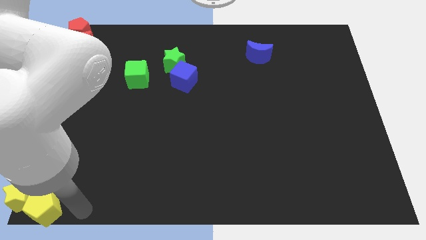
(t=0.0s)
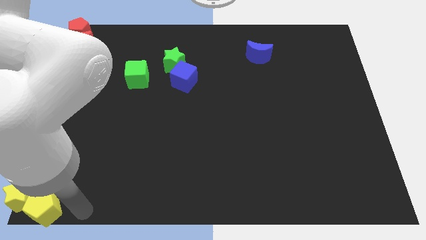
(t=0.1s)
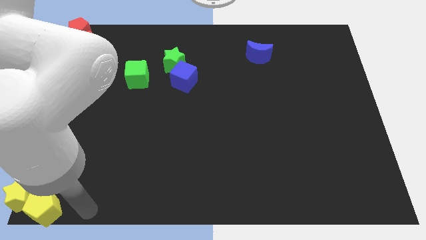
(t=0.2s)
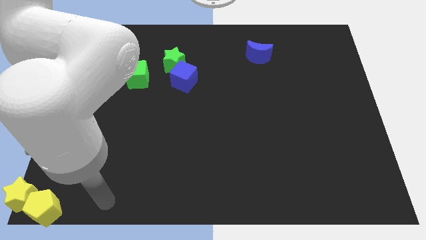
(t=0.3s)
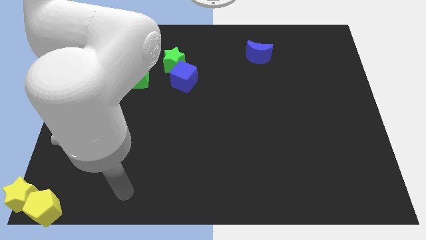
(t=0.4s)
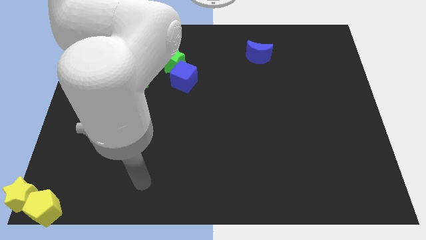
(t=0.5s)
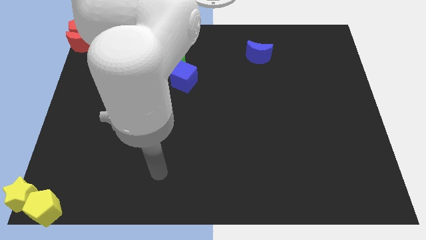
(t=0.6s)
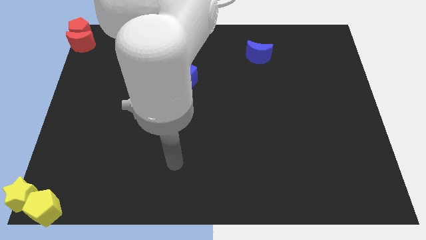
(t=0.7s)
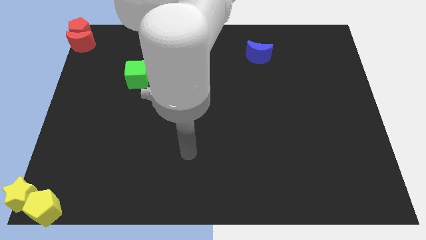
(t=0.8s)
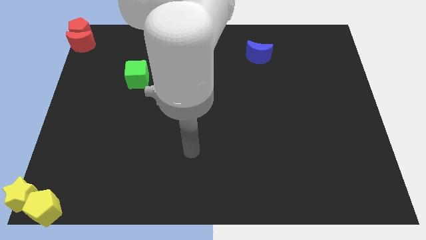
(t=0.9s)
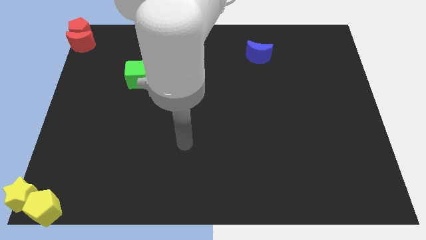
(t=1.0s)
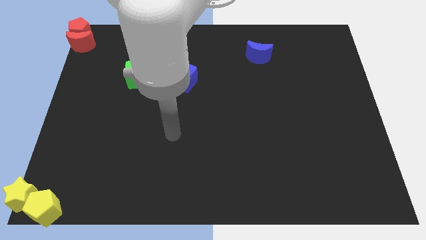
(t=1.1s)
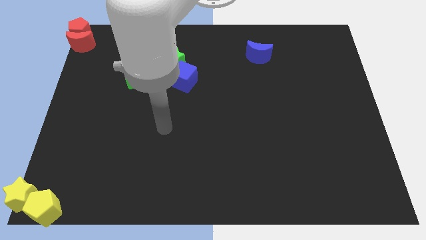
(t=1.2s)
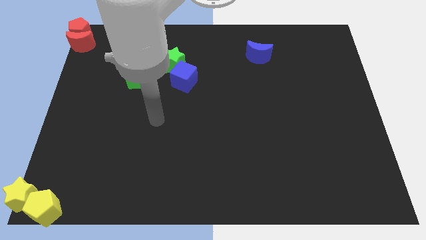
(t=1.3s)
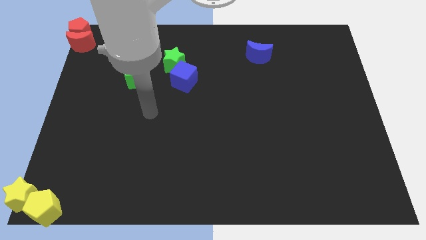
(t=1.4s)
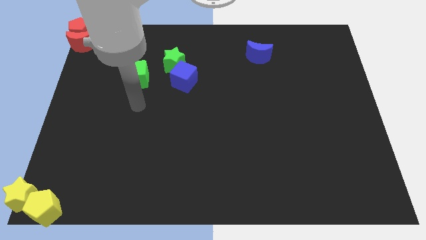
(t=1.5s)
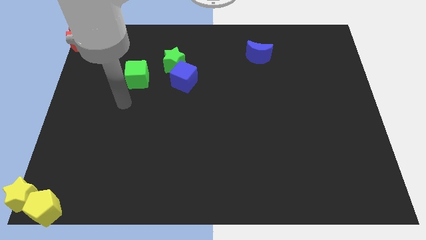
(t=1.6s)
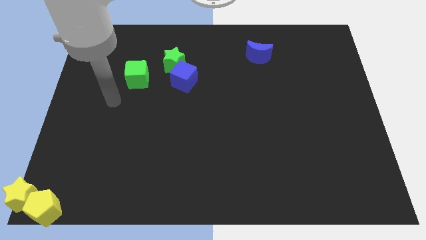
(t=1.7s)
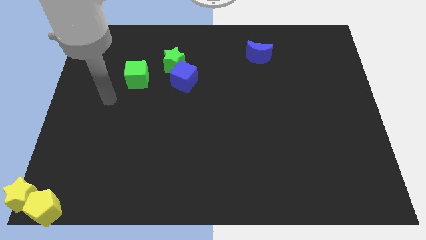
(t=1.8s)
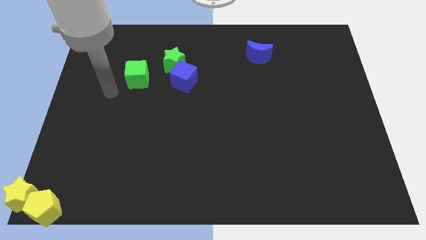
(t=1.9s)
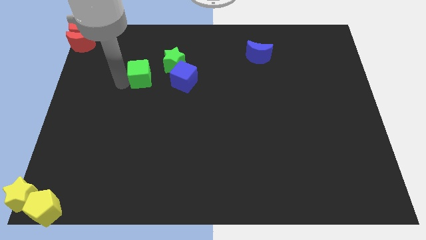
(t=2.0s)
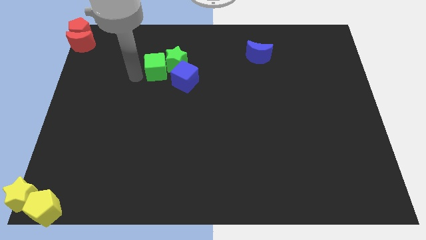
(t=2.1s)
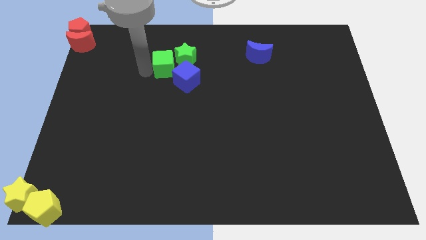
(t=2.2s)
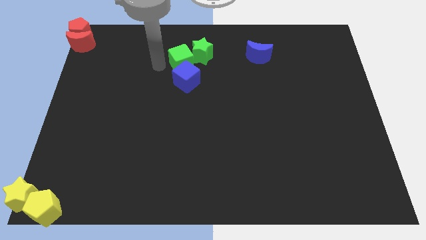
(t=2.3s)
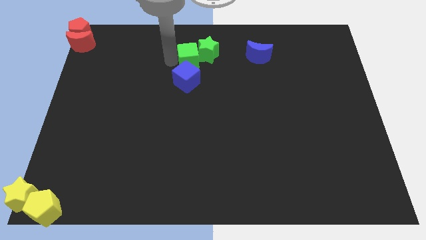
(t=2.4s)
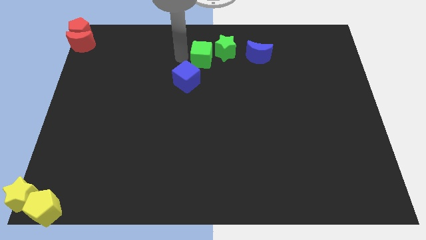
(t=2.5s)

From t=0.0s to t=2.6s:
push the green star with green cube to the left of the blue moon

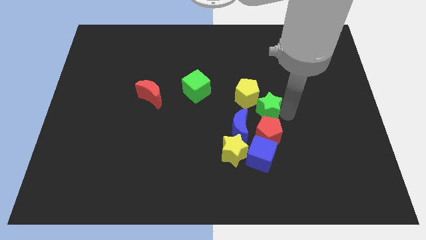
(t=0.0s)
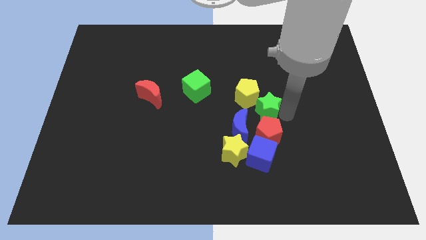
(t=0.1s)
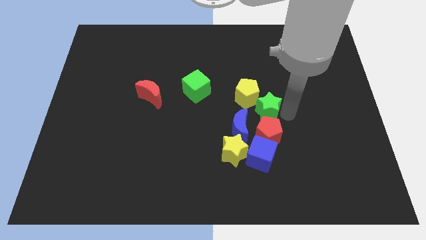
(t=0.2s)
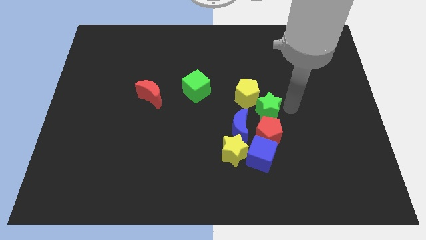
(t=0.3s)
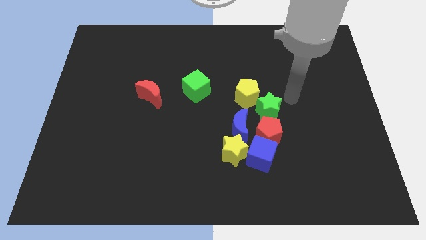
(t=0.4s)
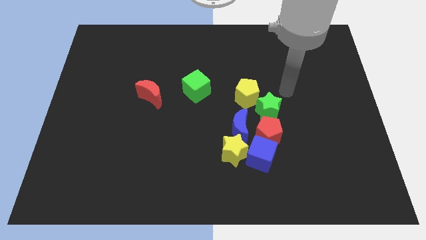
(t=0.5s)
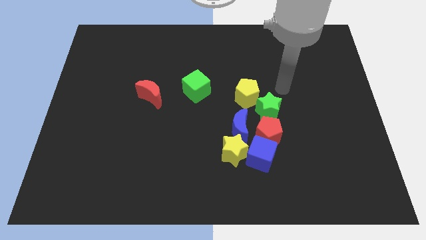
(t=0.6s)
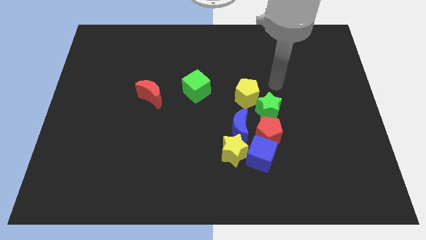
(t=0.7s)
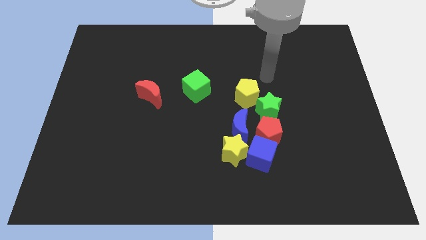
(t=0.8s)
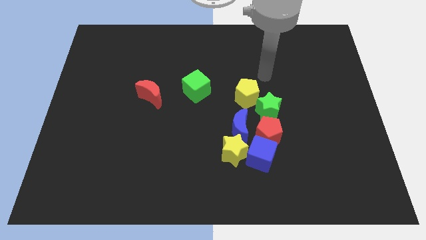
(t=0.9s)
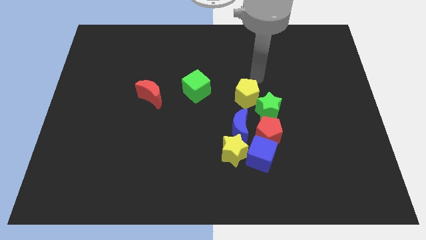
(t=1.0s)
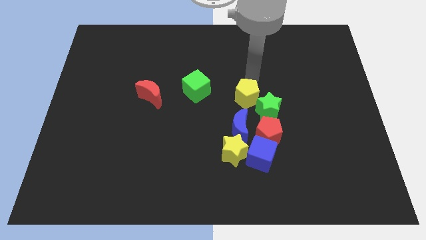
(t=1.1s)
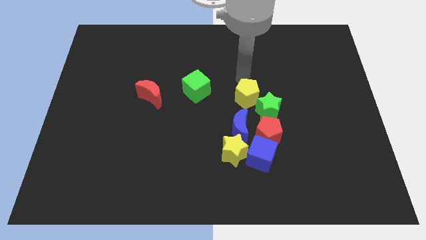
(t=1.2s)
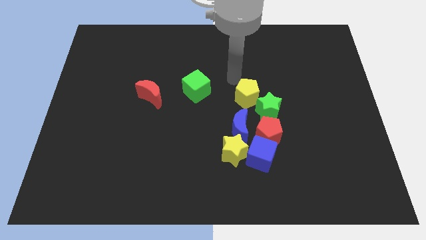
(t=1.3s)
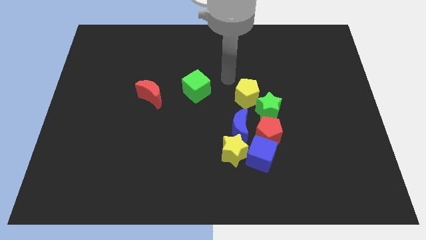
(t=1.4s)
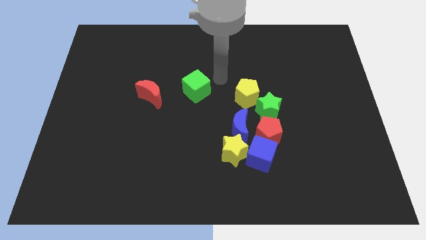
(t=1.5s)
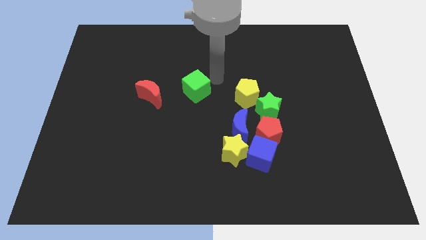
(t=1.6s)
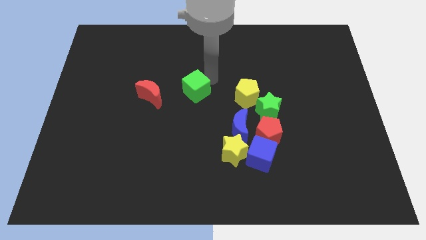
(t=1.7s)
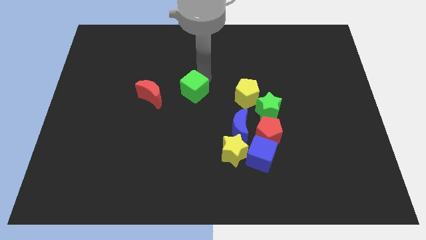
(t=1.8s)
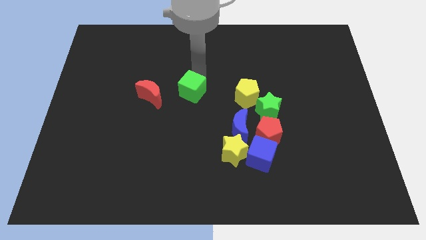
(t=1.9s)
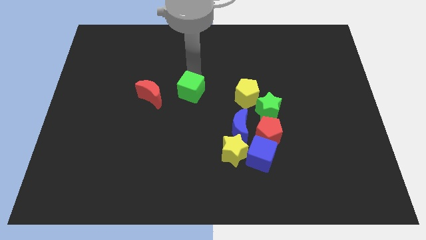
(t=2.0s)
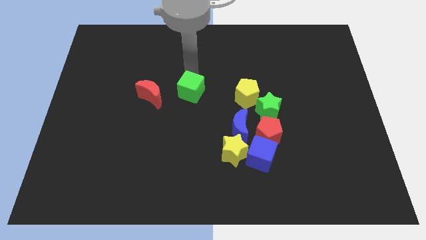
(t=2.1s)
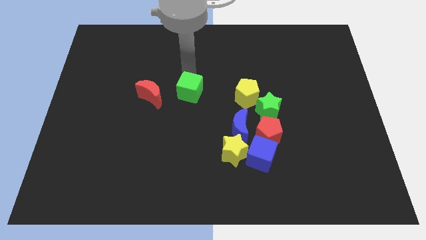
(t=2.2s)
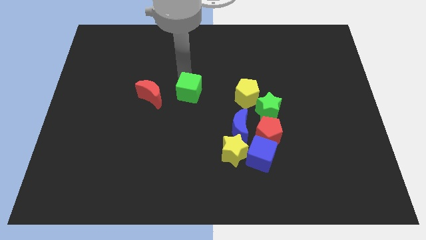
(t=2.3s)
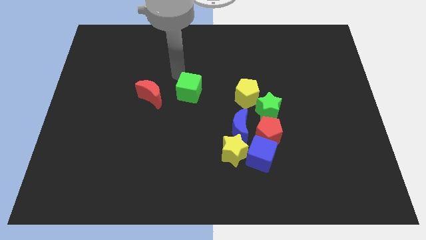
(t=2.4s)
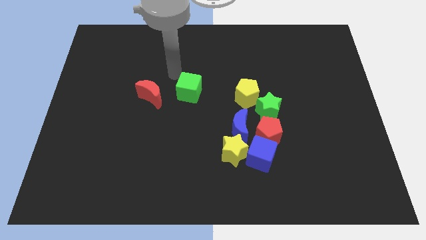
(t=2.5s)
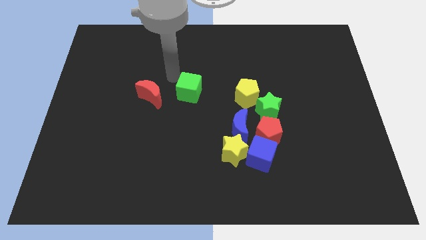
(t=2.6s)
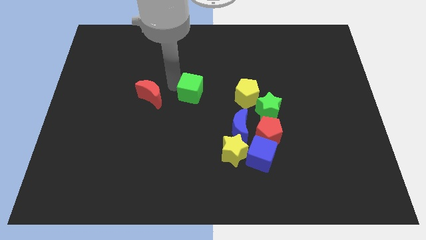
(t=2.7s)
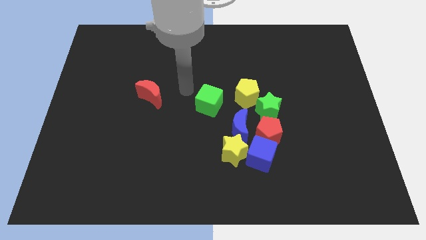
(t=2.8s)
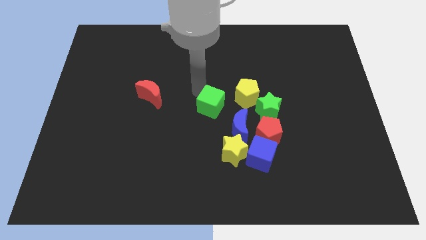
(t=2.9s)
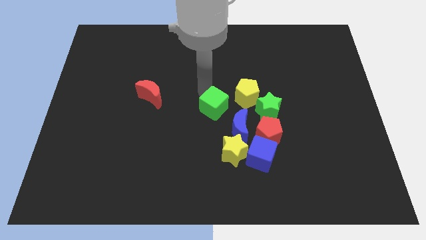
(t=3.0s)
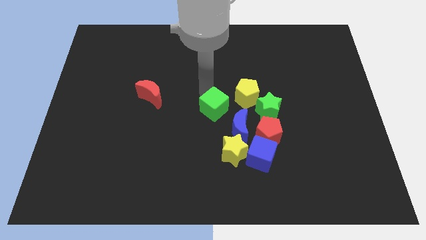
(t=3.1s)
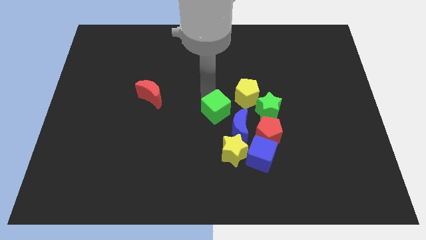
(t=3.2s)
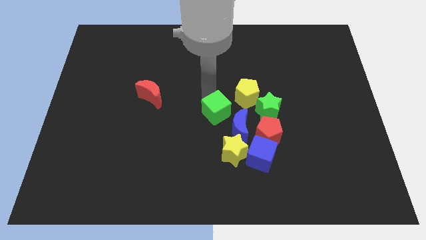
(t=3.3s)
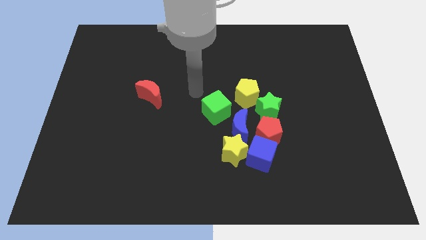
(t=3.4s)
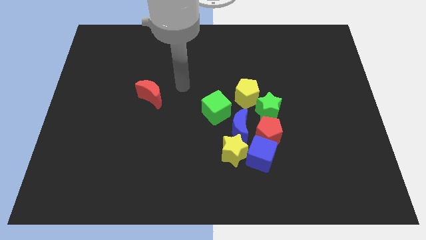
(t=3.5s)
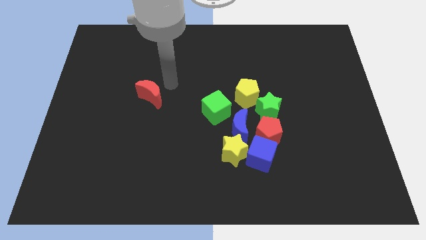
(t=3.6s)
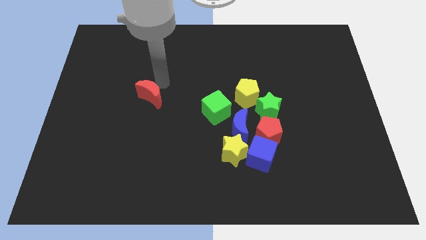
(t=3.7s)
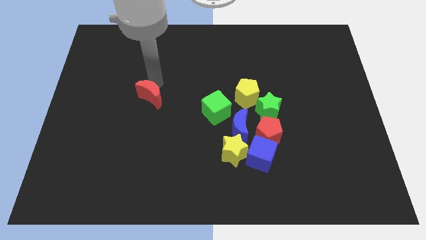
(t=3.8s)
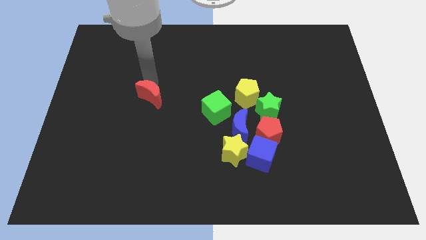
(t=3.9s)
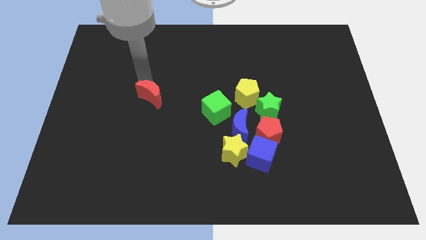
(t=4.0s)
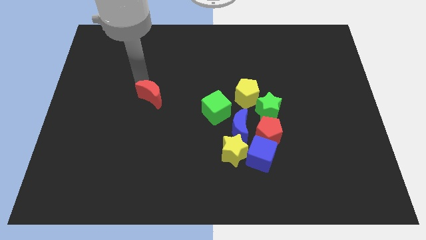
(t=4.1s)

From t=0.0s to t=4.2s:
place green star left to blue moon

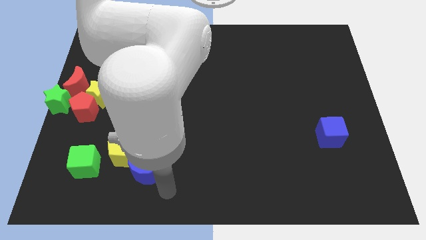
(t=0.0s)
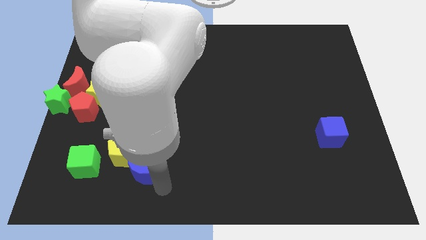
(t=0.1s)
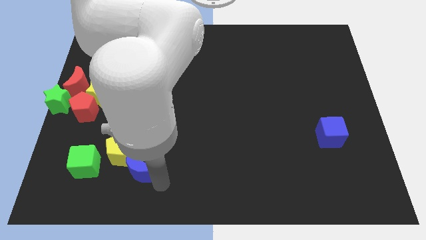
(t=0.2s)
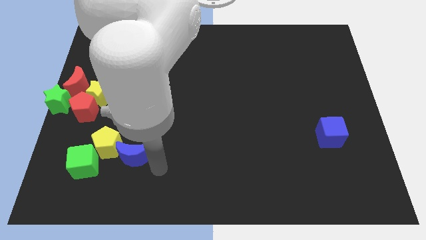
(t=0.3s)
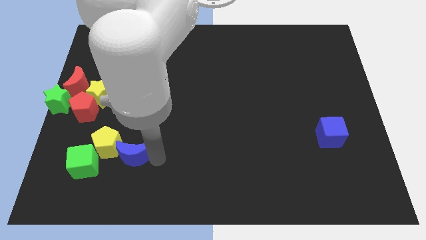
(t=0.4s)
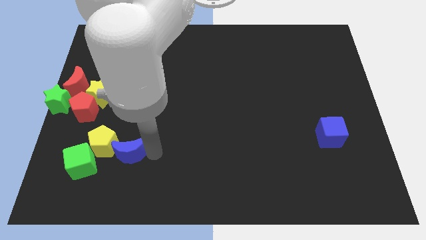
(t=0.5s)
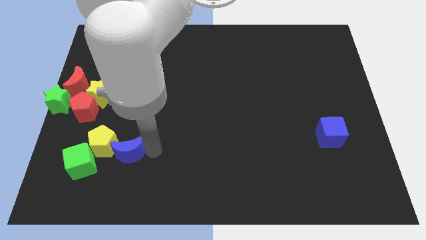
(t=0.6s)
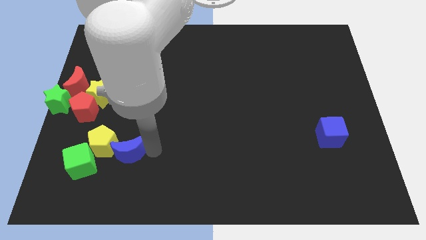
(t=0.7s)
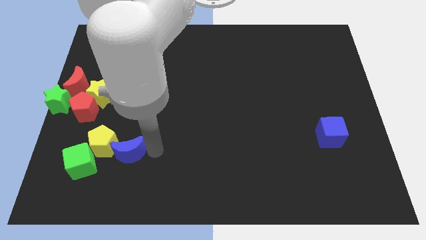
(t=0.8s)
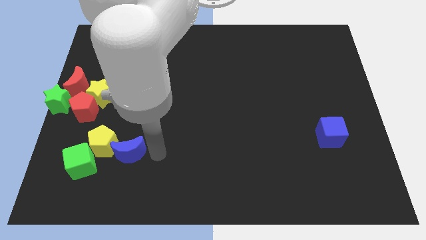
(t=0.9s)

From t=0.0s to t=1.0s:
push the yellow pentagon into the green cube with the help of the blue crescent

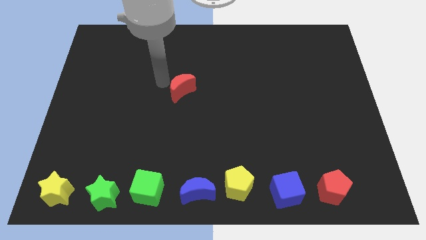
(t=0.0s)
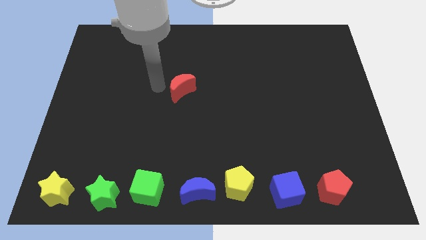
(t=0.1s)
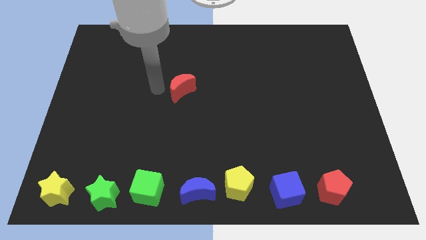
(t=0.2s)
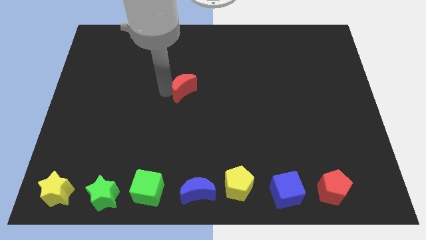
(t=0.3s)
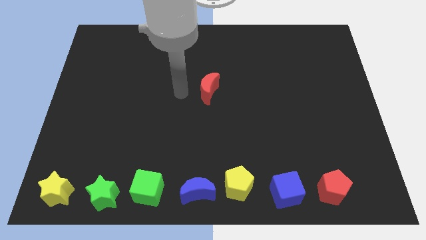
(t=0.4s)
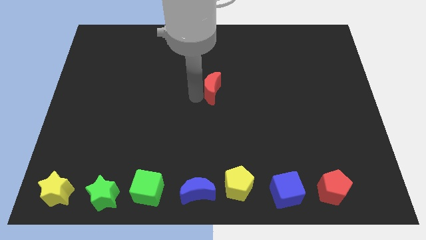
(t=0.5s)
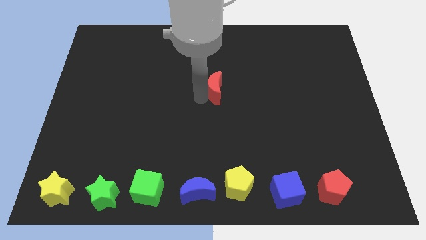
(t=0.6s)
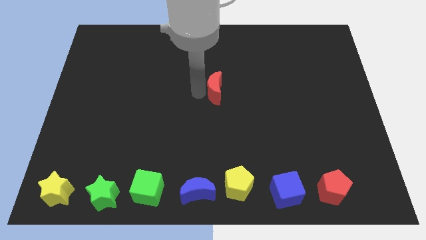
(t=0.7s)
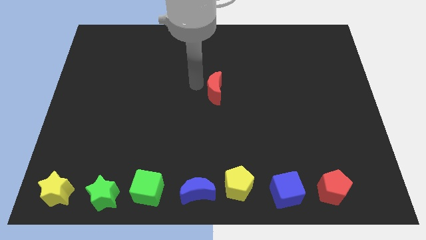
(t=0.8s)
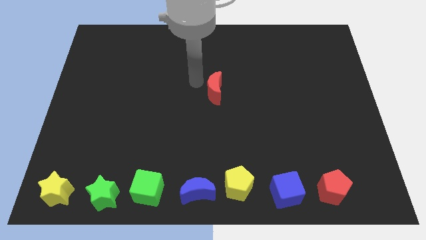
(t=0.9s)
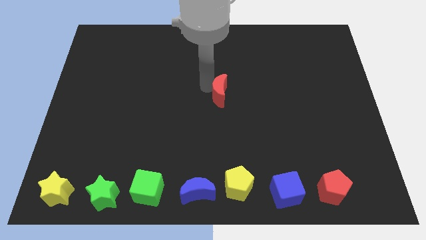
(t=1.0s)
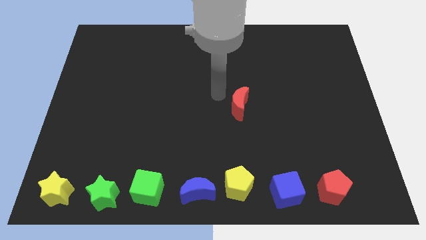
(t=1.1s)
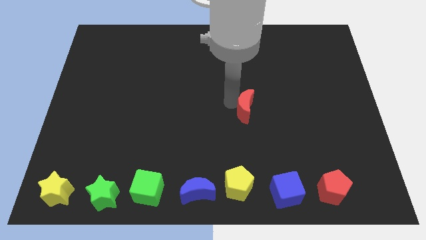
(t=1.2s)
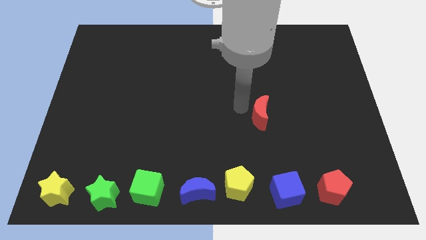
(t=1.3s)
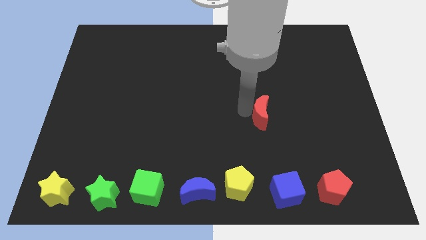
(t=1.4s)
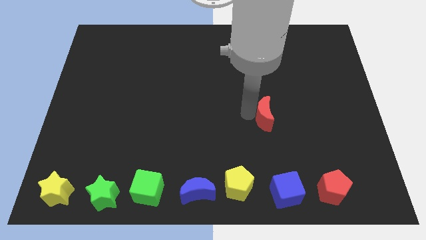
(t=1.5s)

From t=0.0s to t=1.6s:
place the red moon above the blue cube
